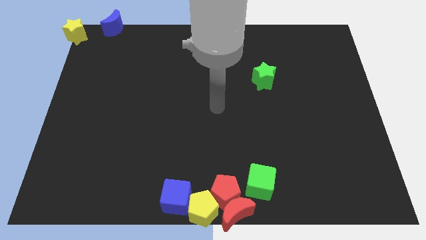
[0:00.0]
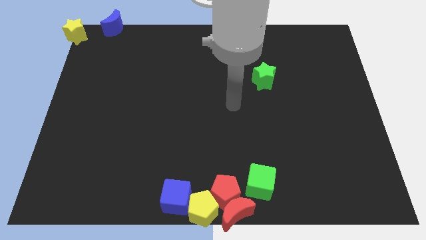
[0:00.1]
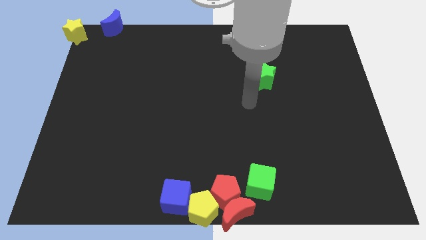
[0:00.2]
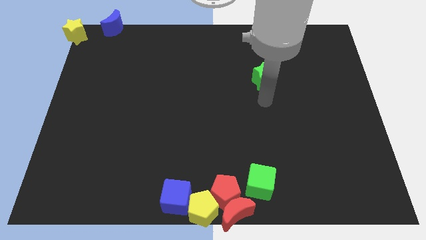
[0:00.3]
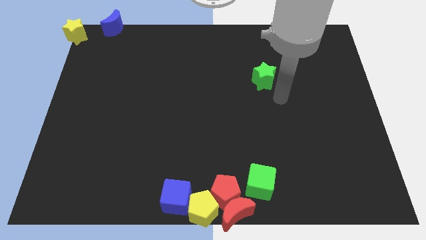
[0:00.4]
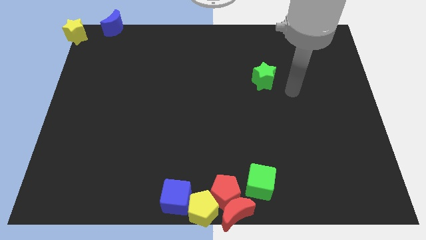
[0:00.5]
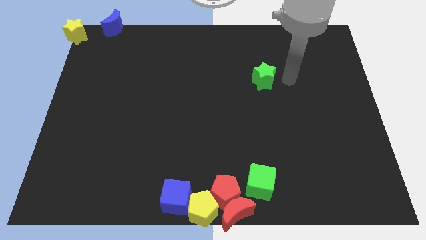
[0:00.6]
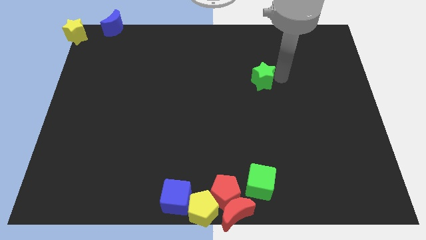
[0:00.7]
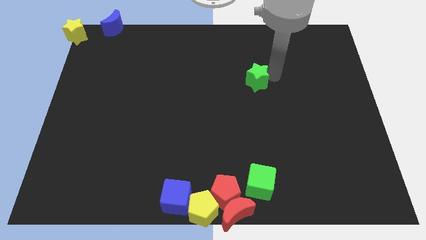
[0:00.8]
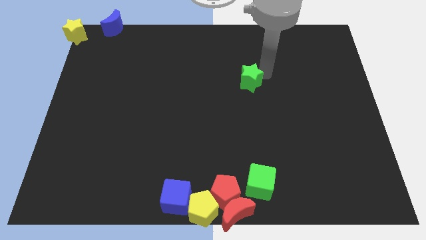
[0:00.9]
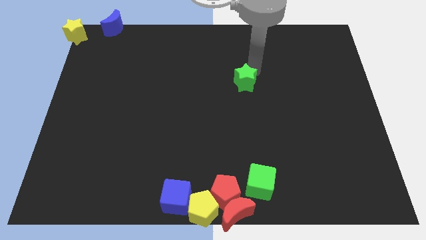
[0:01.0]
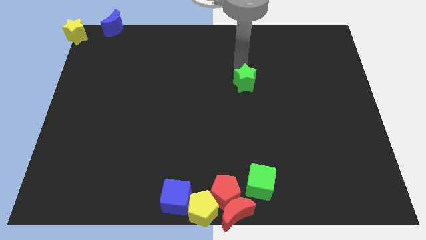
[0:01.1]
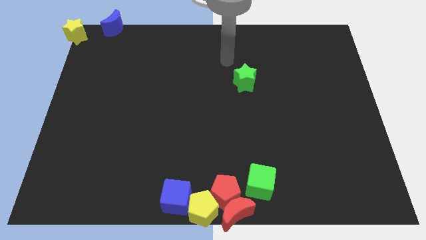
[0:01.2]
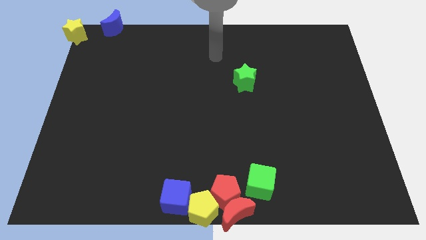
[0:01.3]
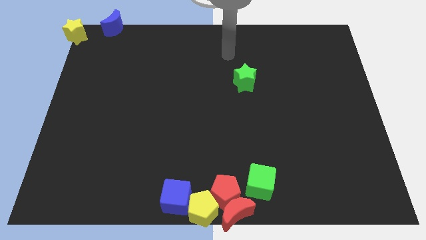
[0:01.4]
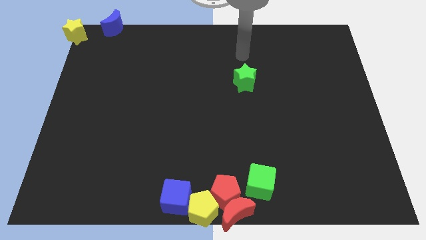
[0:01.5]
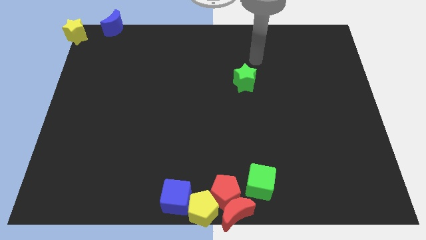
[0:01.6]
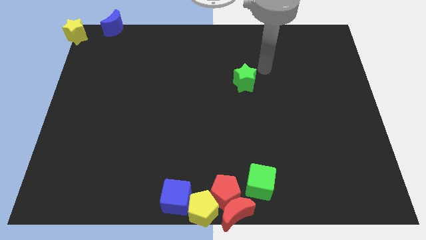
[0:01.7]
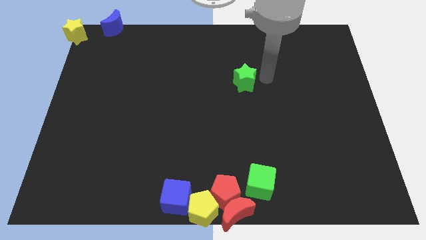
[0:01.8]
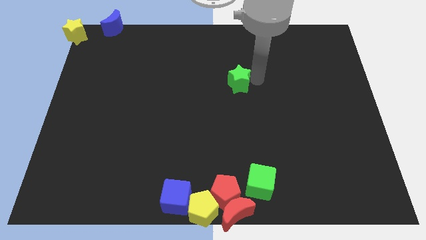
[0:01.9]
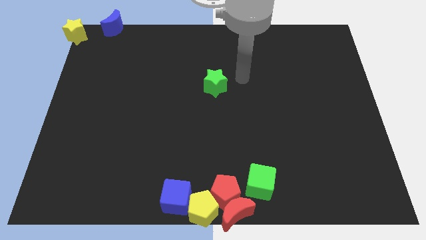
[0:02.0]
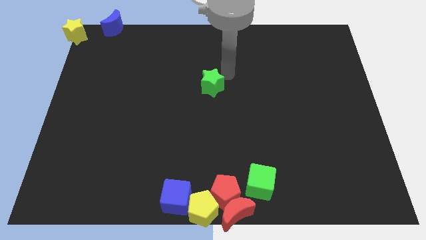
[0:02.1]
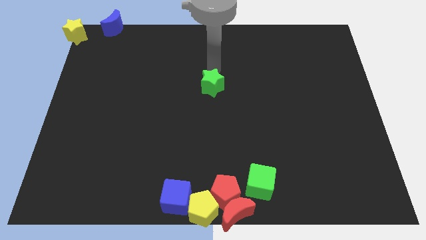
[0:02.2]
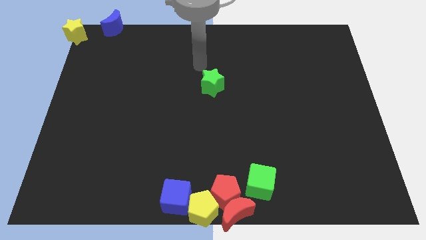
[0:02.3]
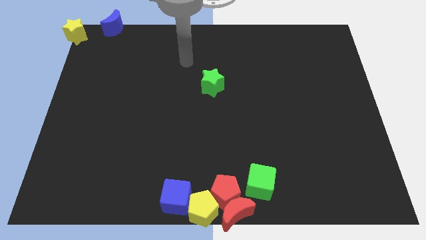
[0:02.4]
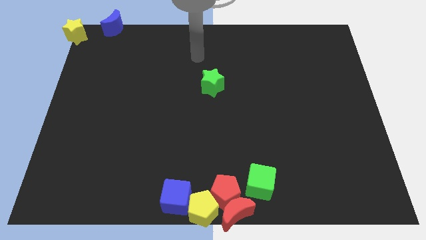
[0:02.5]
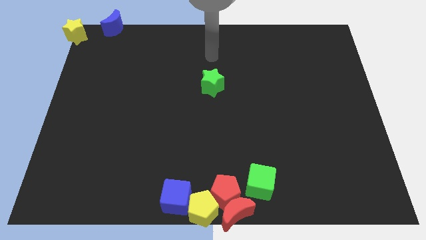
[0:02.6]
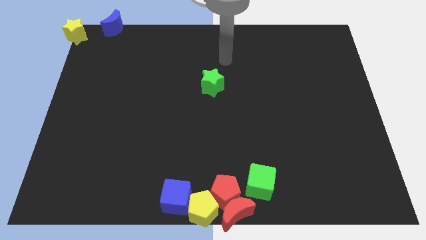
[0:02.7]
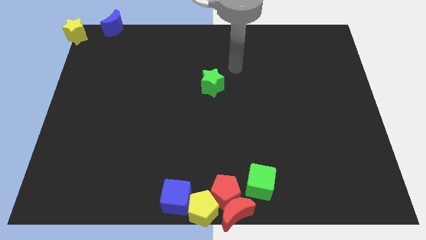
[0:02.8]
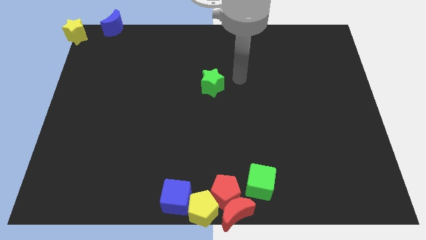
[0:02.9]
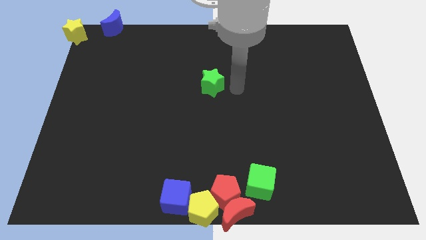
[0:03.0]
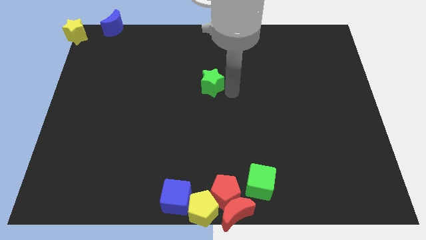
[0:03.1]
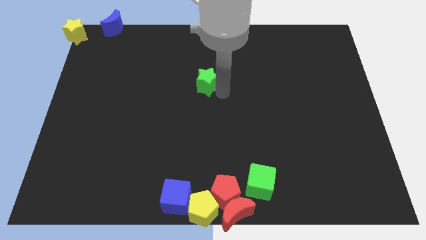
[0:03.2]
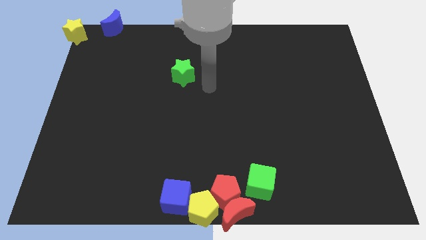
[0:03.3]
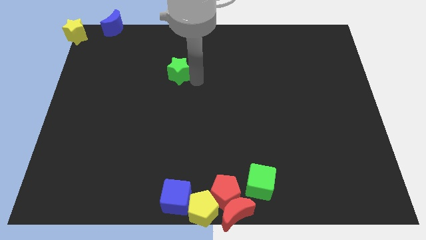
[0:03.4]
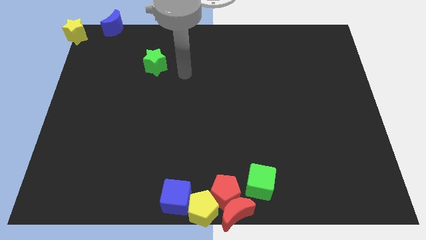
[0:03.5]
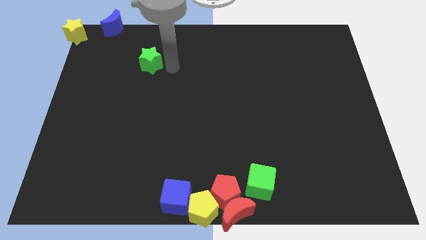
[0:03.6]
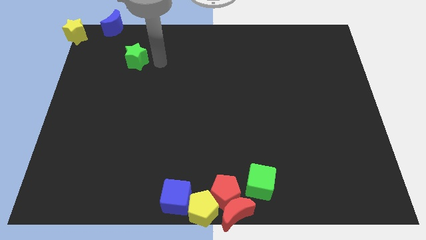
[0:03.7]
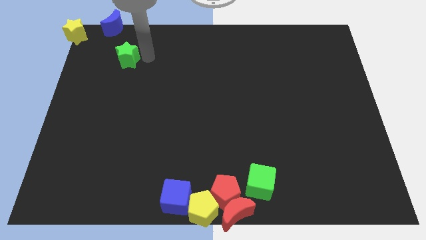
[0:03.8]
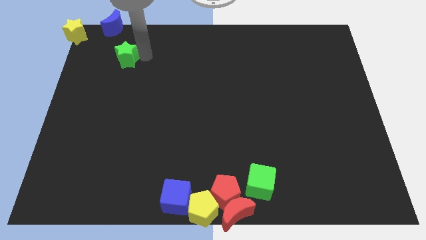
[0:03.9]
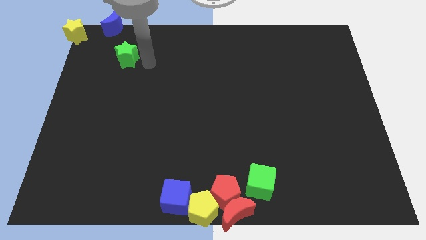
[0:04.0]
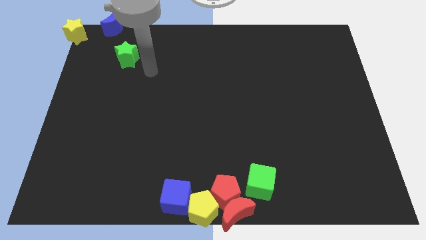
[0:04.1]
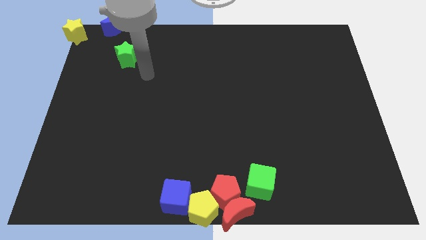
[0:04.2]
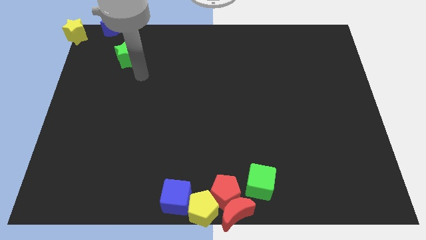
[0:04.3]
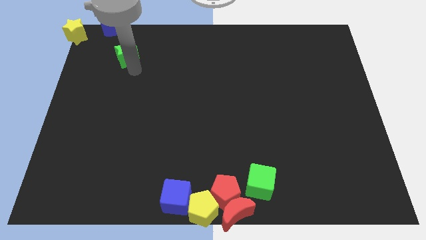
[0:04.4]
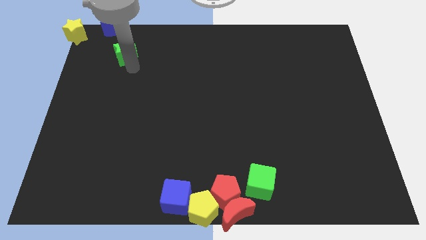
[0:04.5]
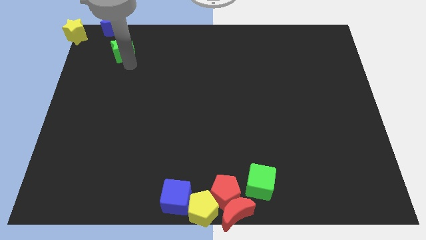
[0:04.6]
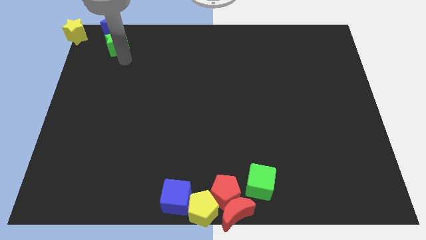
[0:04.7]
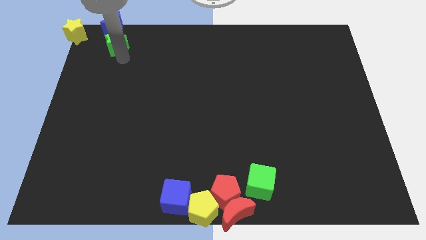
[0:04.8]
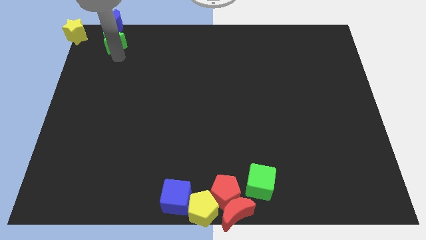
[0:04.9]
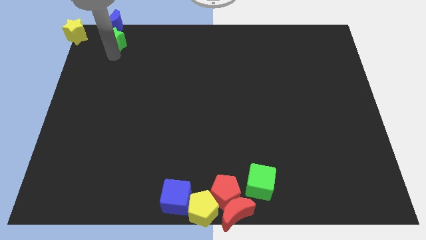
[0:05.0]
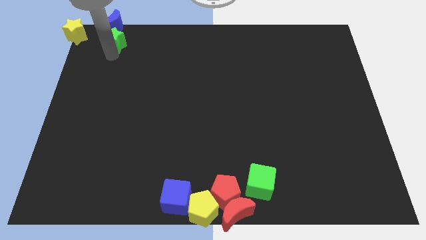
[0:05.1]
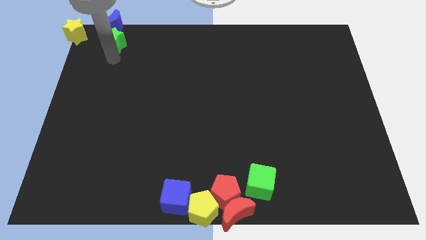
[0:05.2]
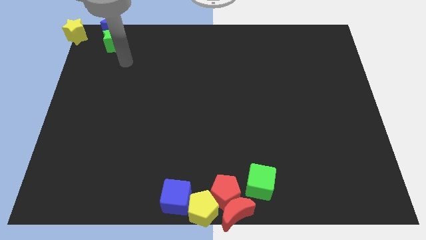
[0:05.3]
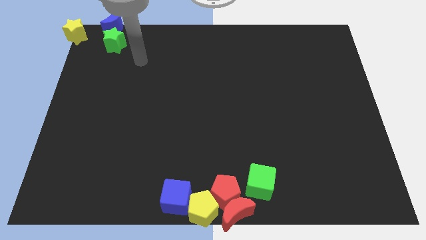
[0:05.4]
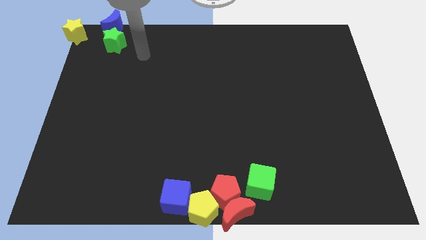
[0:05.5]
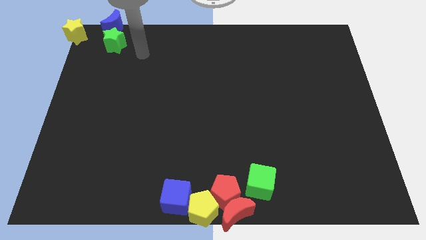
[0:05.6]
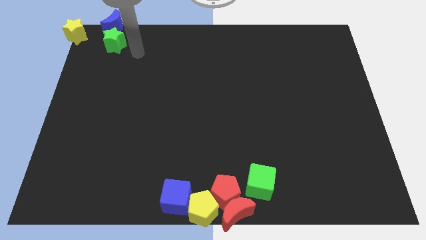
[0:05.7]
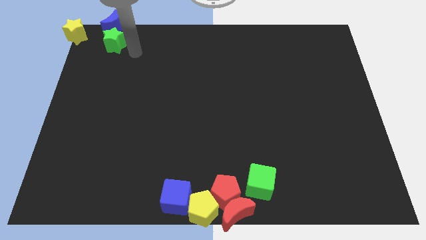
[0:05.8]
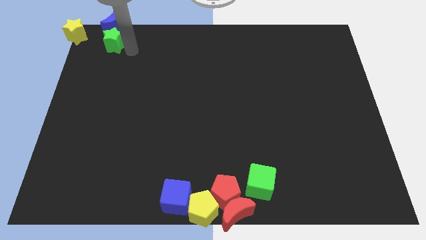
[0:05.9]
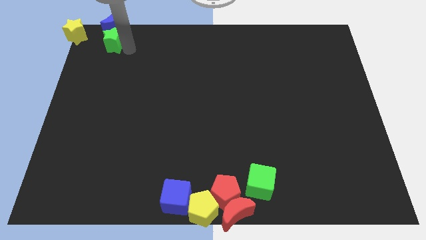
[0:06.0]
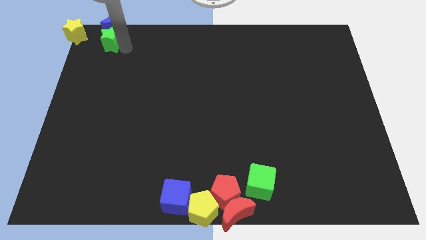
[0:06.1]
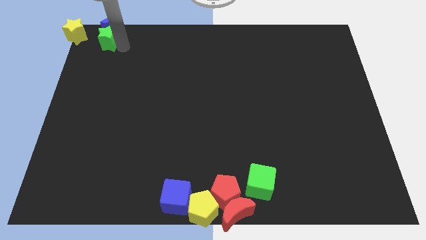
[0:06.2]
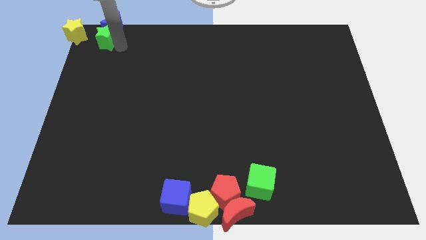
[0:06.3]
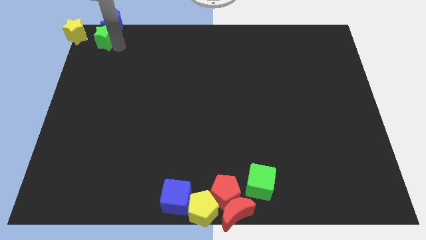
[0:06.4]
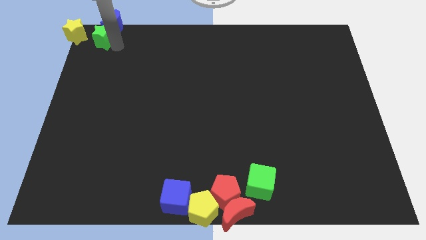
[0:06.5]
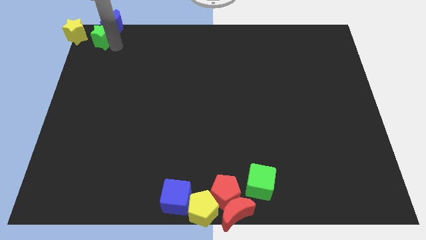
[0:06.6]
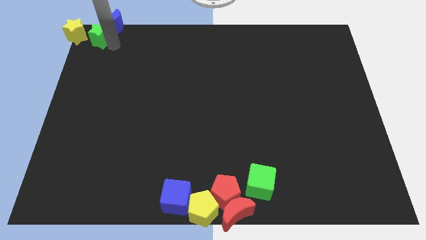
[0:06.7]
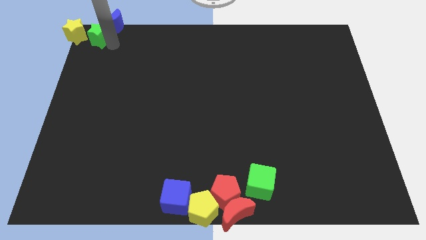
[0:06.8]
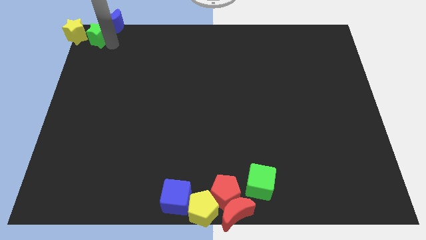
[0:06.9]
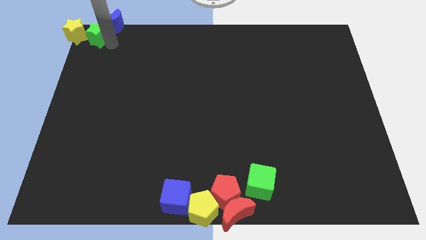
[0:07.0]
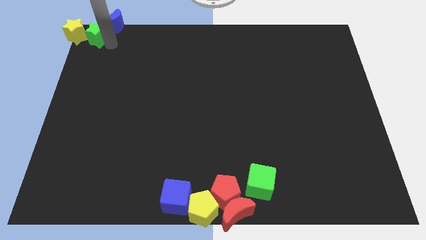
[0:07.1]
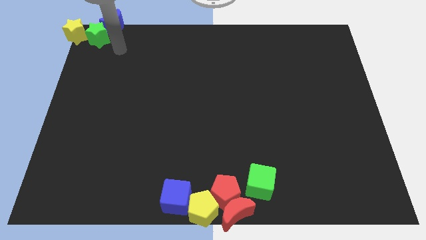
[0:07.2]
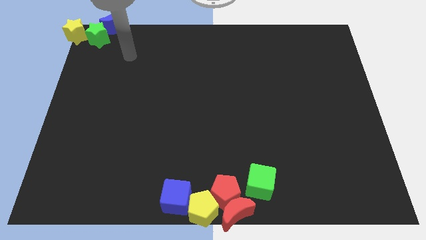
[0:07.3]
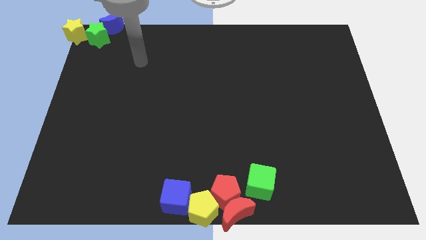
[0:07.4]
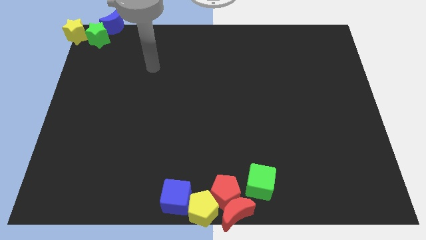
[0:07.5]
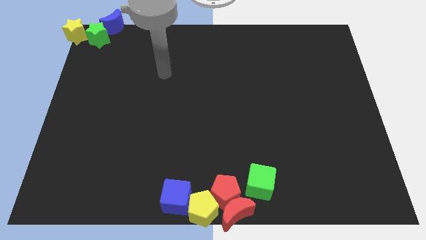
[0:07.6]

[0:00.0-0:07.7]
push the green star into the blue moon

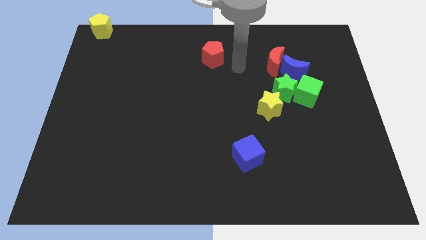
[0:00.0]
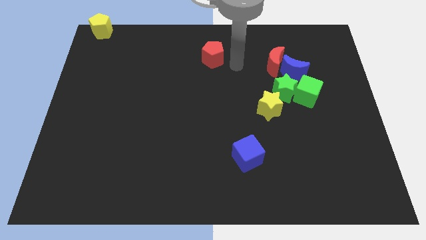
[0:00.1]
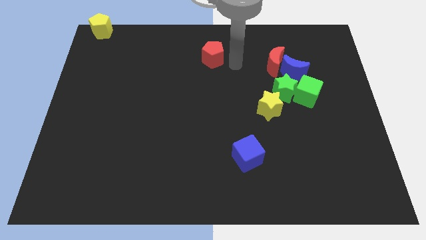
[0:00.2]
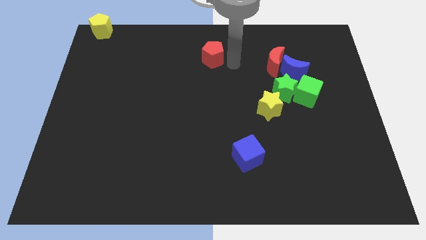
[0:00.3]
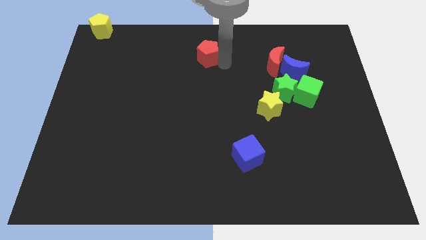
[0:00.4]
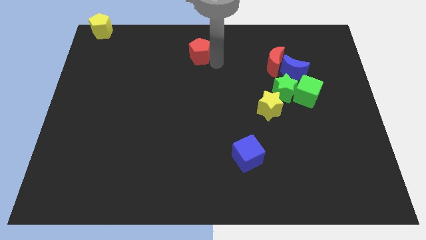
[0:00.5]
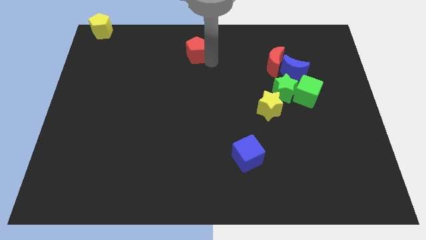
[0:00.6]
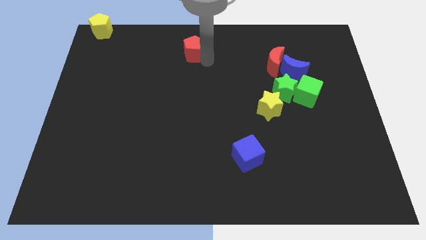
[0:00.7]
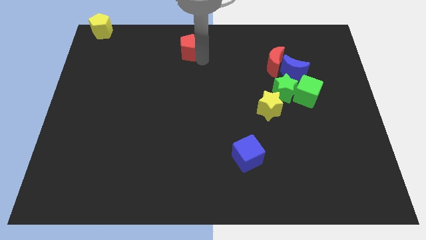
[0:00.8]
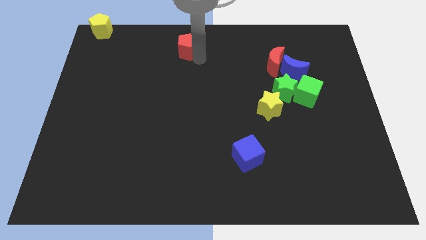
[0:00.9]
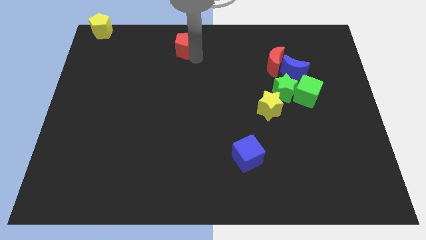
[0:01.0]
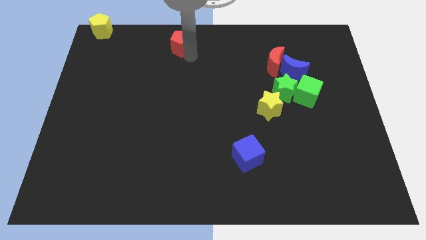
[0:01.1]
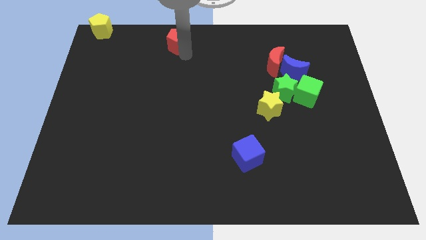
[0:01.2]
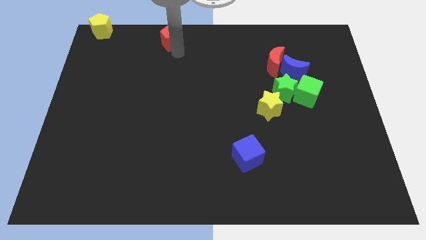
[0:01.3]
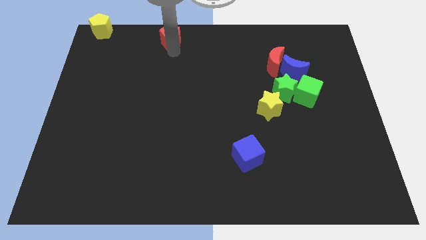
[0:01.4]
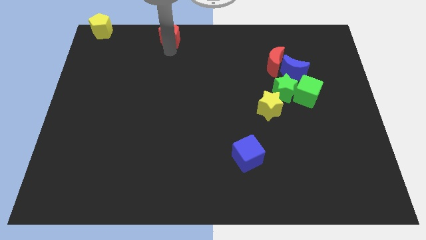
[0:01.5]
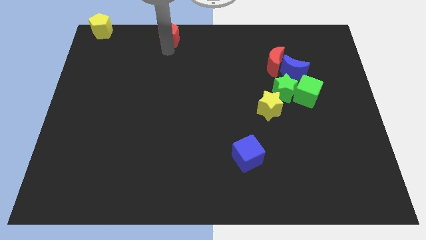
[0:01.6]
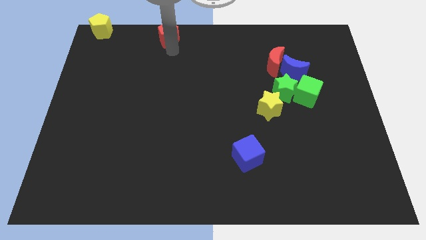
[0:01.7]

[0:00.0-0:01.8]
place red pentagon to the right of yellow pentagon
